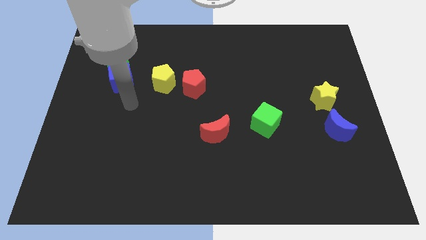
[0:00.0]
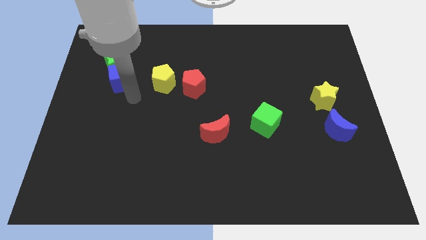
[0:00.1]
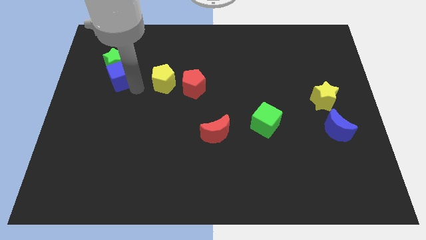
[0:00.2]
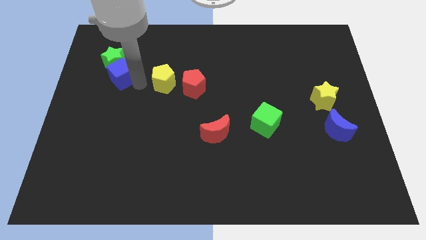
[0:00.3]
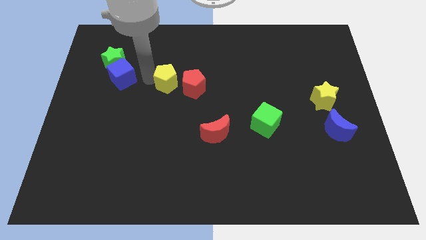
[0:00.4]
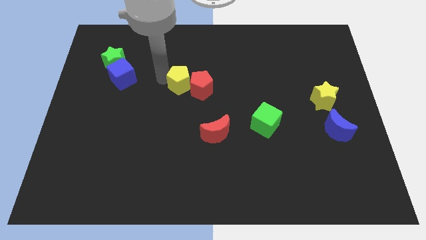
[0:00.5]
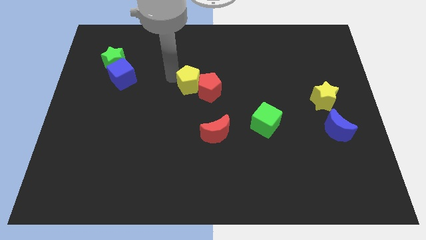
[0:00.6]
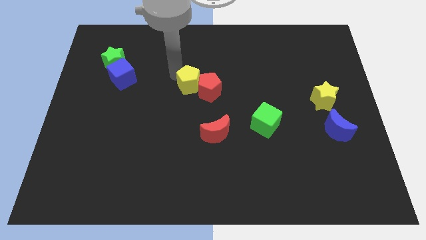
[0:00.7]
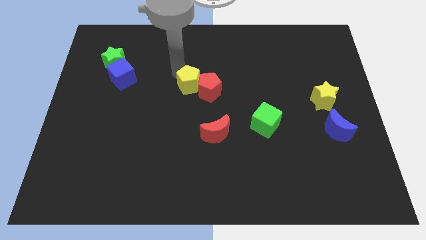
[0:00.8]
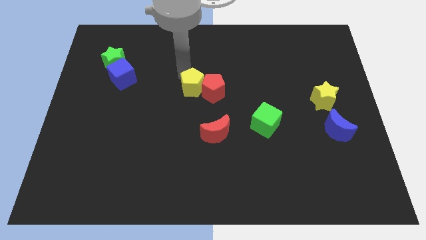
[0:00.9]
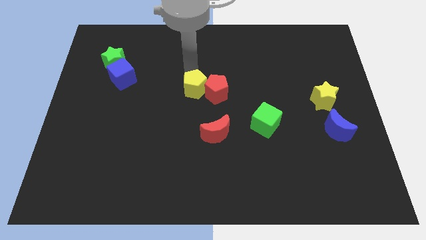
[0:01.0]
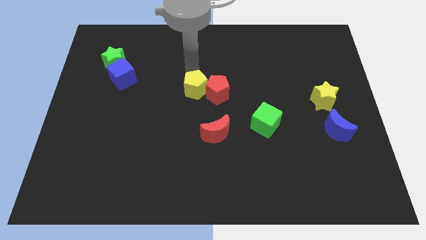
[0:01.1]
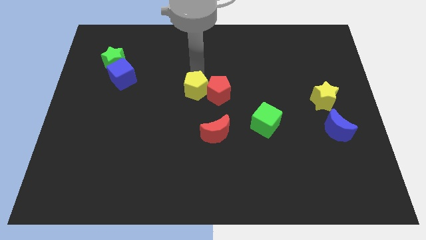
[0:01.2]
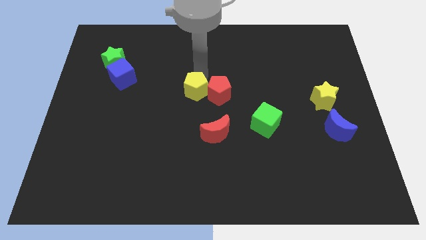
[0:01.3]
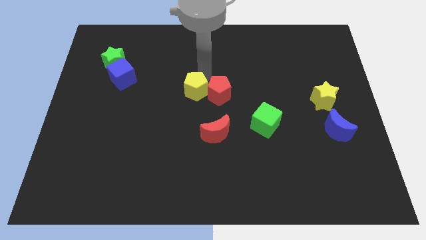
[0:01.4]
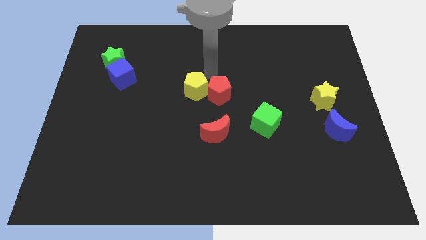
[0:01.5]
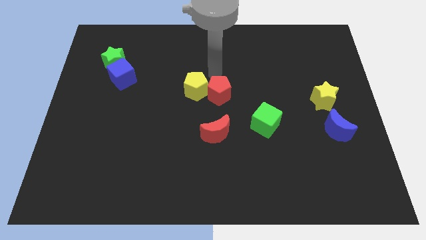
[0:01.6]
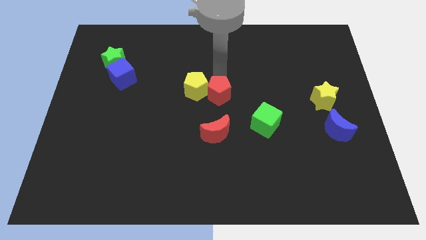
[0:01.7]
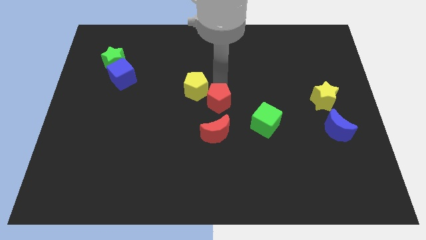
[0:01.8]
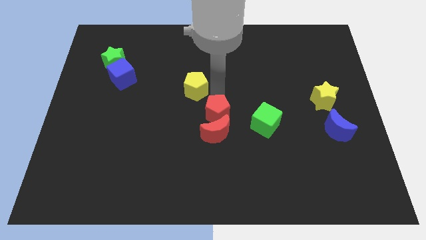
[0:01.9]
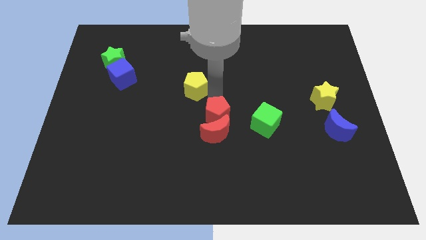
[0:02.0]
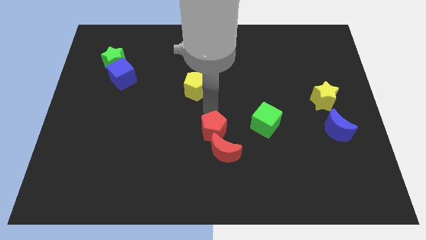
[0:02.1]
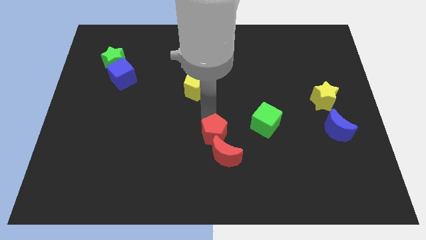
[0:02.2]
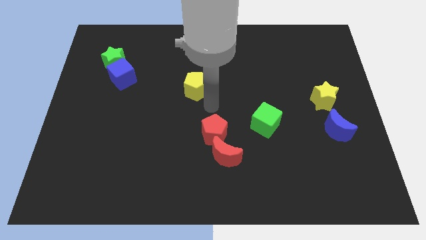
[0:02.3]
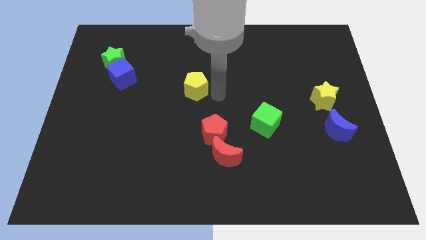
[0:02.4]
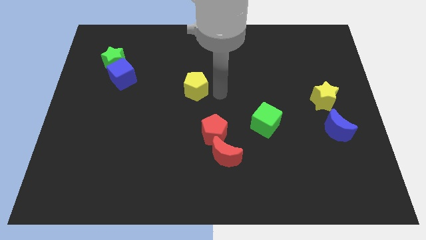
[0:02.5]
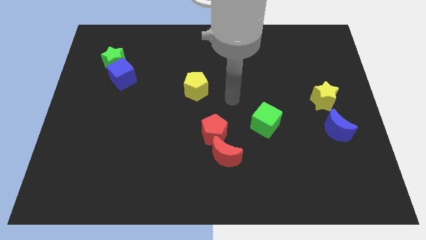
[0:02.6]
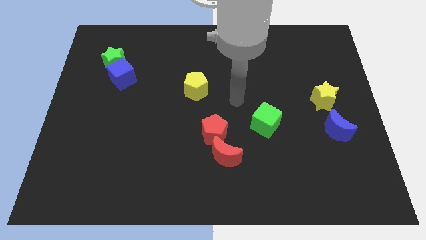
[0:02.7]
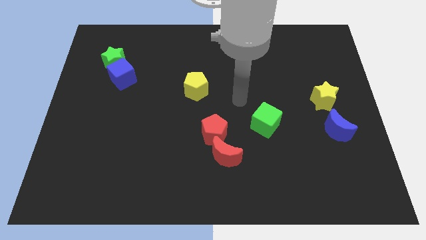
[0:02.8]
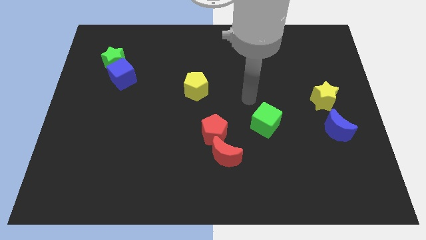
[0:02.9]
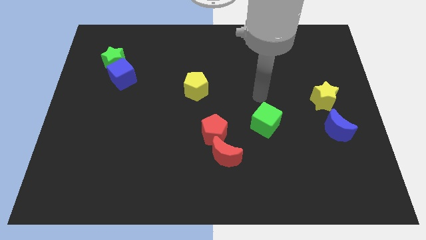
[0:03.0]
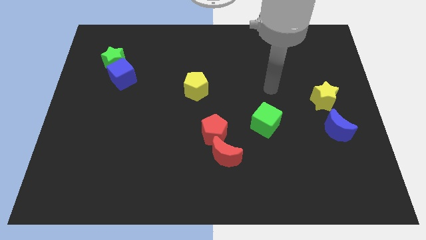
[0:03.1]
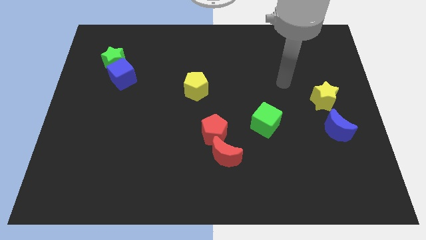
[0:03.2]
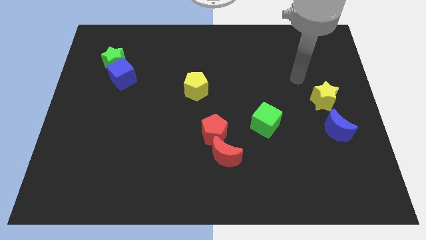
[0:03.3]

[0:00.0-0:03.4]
push the red pentagon into the red crescent

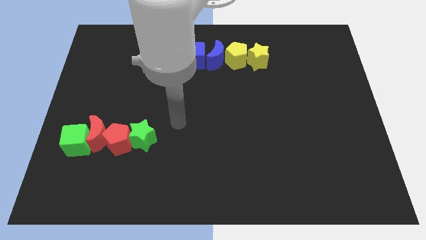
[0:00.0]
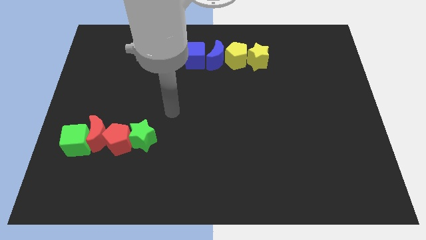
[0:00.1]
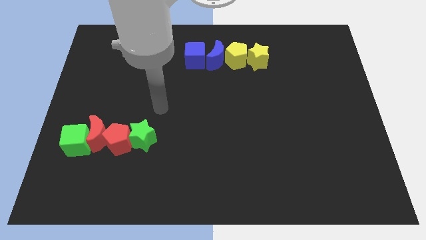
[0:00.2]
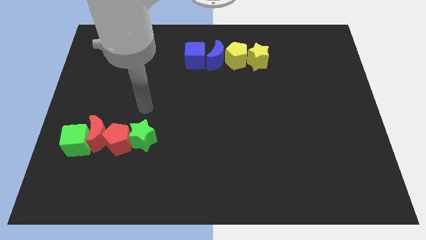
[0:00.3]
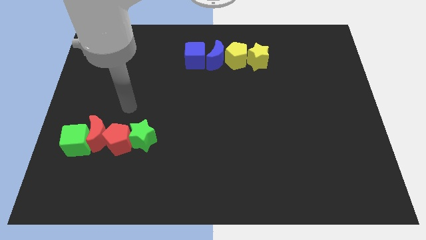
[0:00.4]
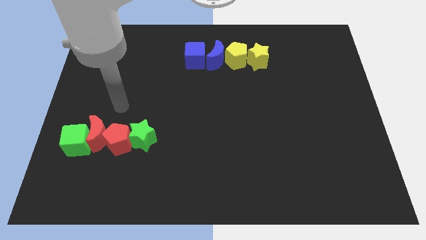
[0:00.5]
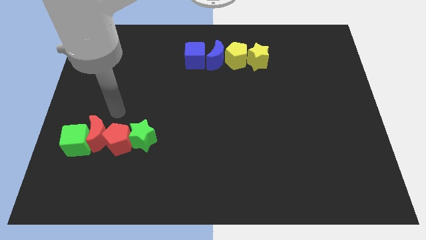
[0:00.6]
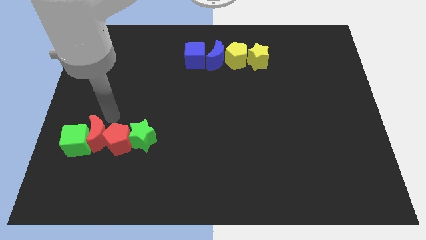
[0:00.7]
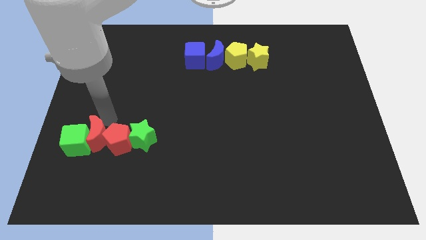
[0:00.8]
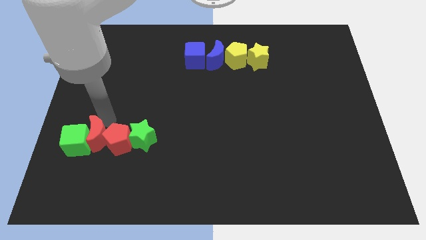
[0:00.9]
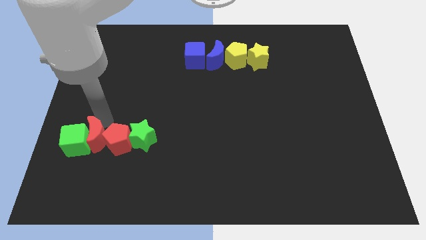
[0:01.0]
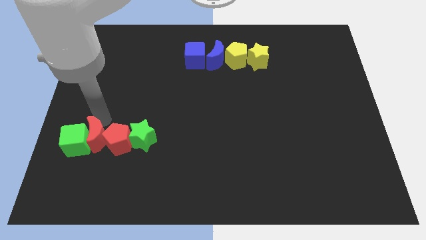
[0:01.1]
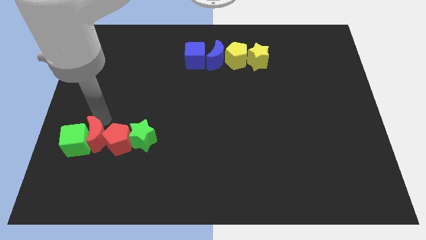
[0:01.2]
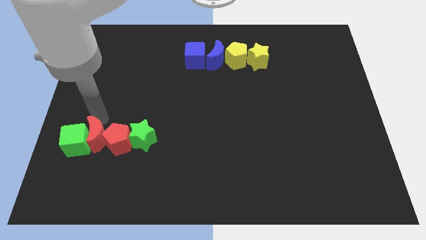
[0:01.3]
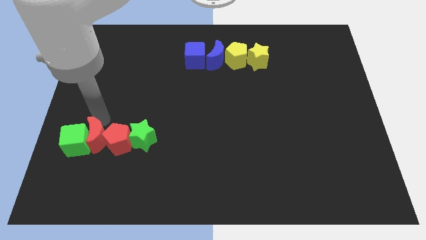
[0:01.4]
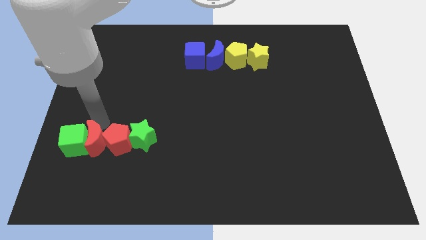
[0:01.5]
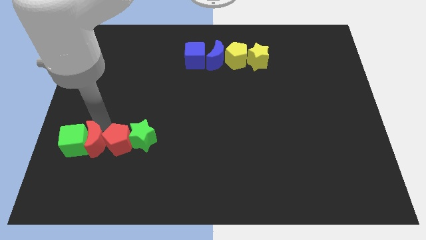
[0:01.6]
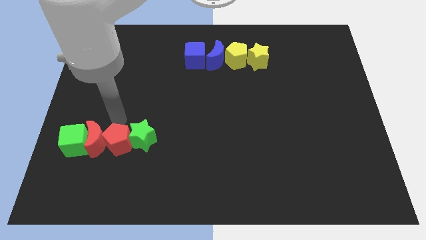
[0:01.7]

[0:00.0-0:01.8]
touch the top of the red crescent

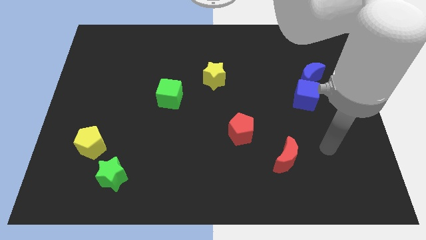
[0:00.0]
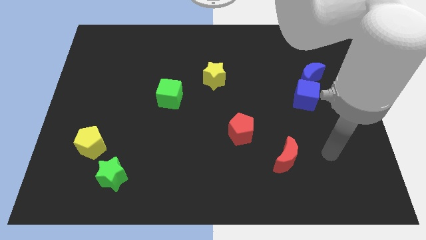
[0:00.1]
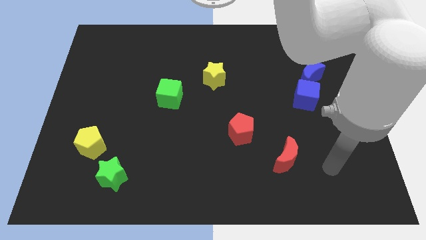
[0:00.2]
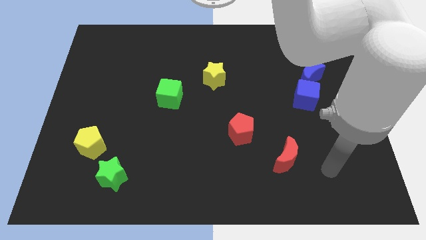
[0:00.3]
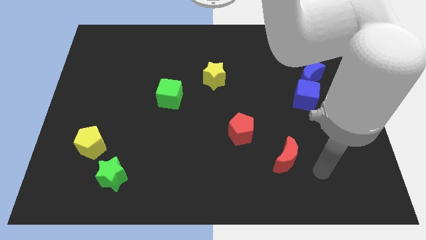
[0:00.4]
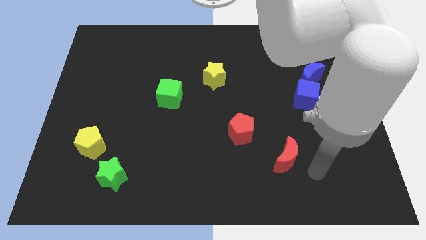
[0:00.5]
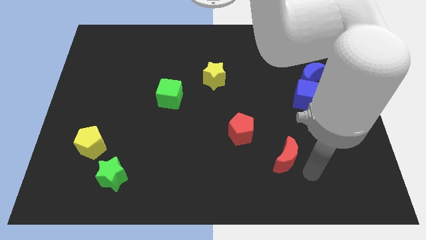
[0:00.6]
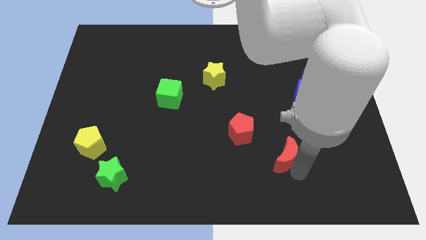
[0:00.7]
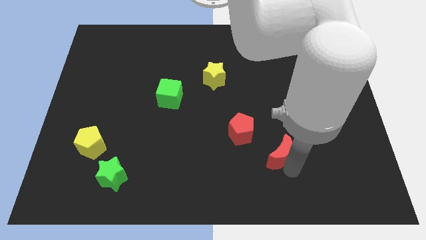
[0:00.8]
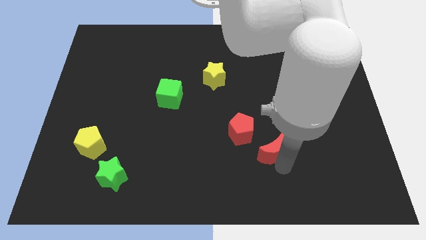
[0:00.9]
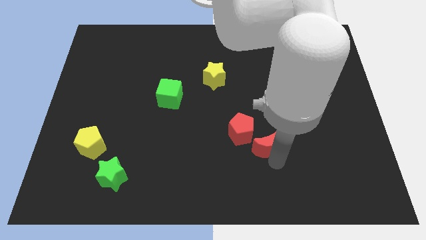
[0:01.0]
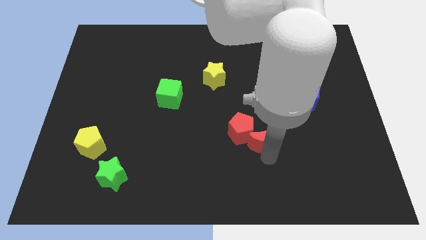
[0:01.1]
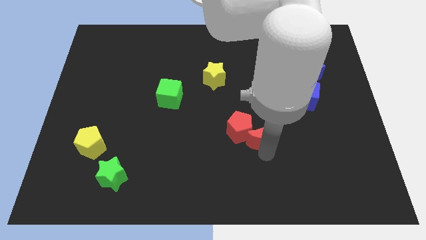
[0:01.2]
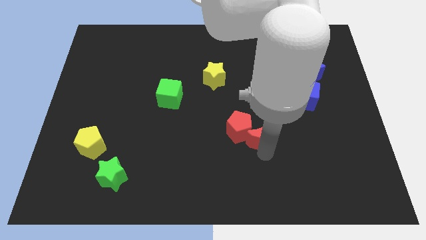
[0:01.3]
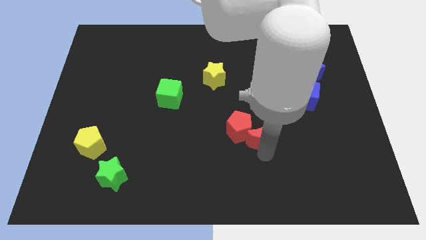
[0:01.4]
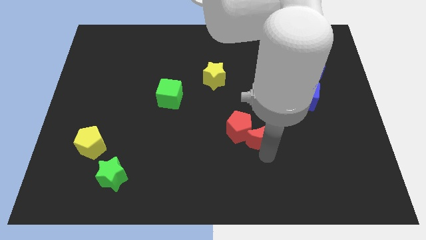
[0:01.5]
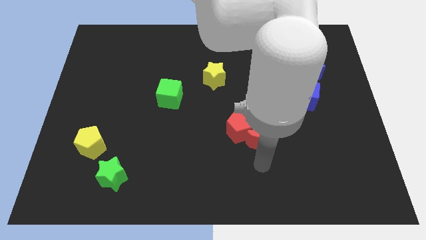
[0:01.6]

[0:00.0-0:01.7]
move the red crescent towards the bottom right of the red pentagon

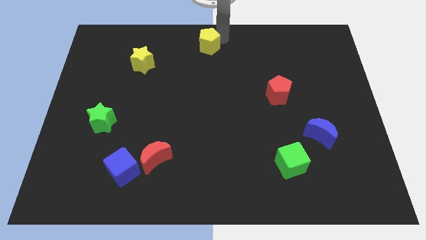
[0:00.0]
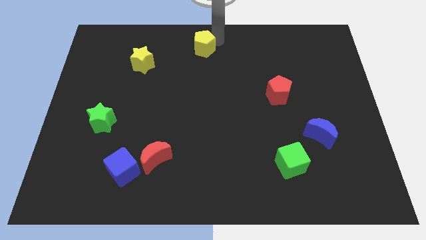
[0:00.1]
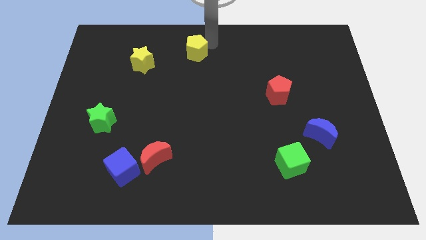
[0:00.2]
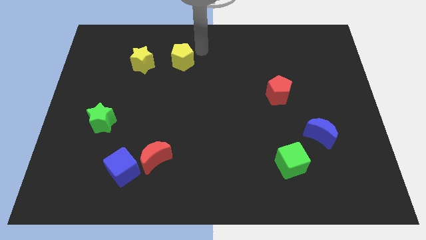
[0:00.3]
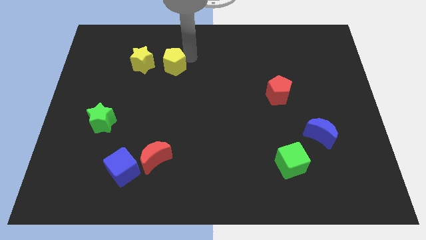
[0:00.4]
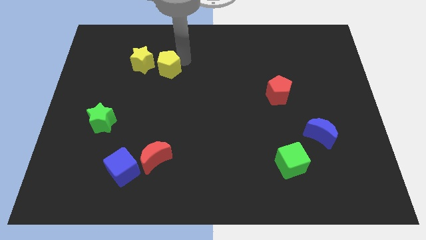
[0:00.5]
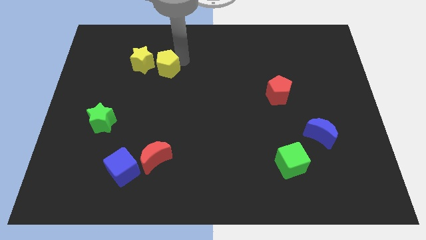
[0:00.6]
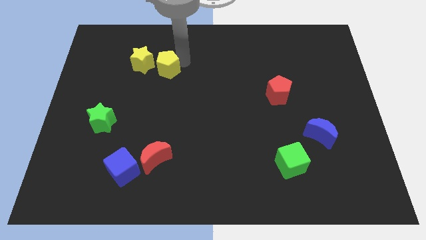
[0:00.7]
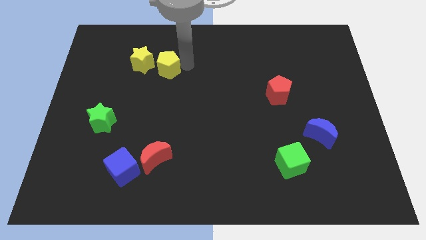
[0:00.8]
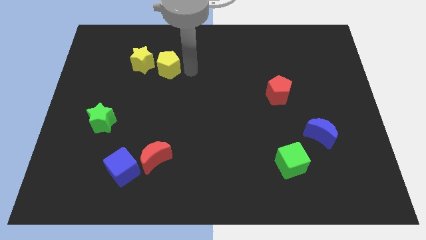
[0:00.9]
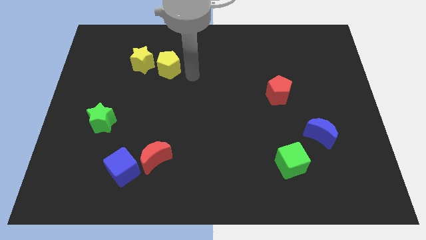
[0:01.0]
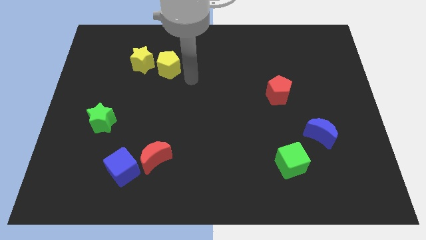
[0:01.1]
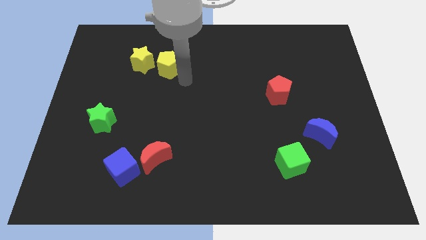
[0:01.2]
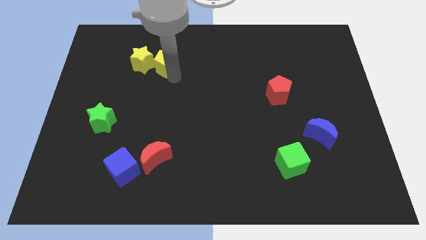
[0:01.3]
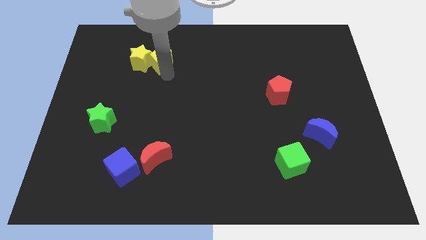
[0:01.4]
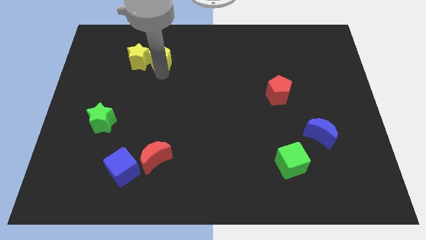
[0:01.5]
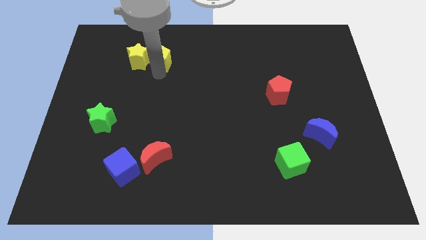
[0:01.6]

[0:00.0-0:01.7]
push the yellow pentagon to the right of the yellow star

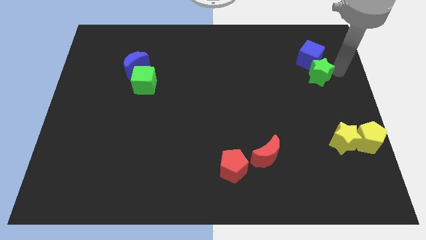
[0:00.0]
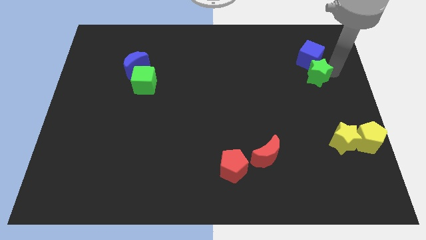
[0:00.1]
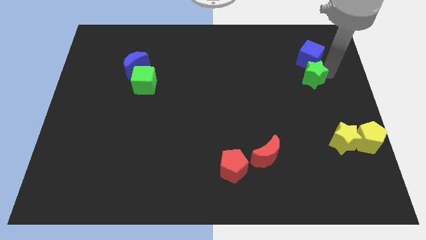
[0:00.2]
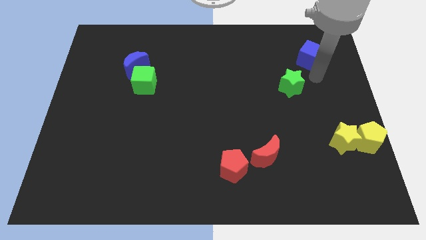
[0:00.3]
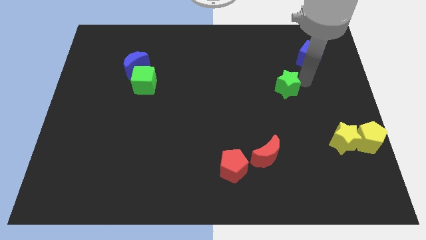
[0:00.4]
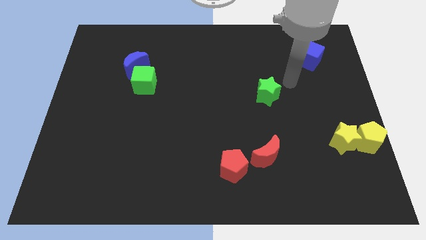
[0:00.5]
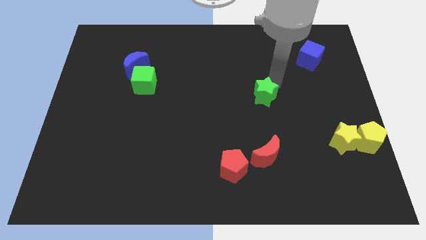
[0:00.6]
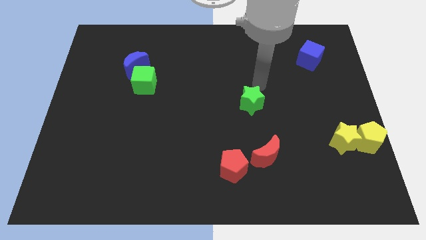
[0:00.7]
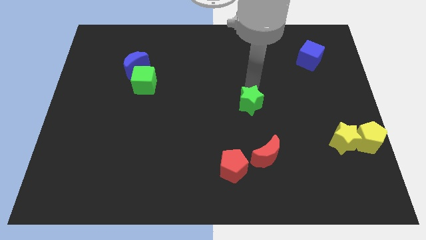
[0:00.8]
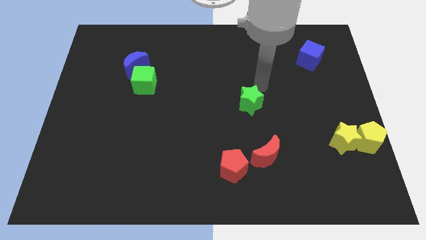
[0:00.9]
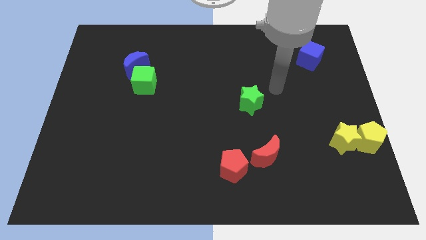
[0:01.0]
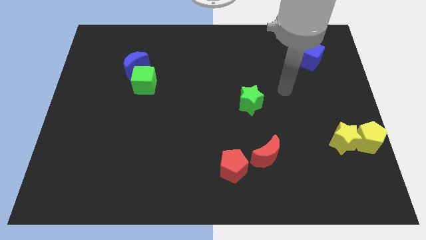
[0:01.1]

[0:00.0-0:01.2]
slide green star at center of the board
